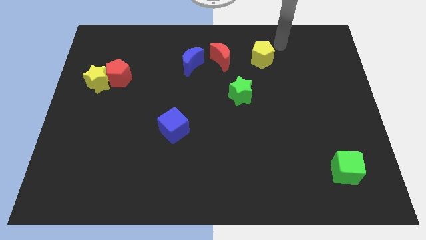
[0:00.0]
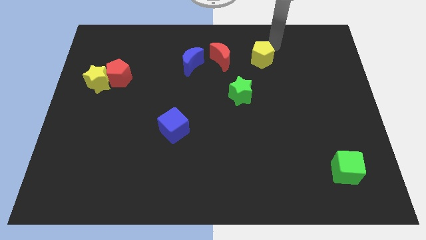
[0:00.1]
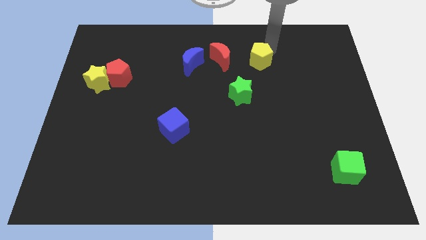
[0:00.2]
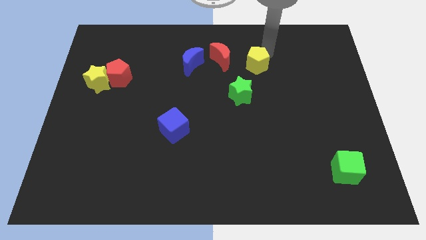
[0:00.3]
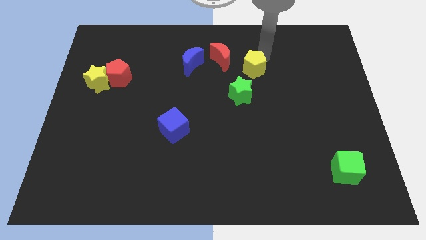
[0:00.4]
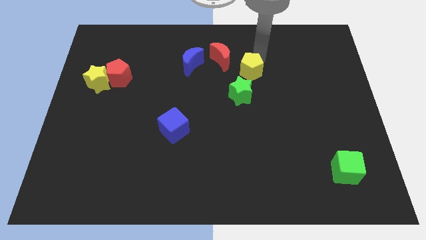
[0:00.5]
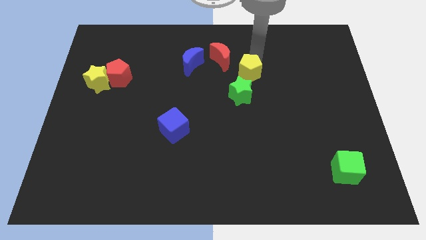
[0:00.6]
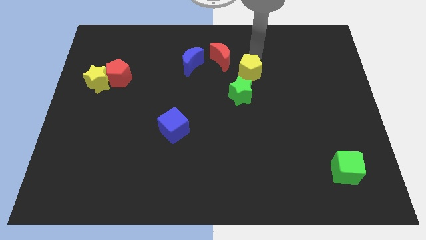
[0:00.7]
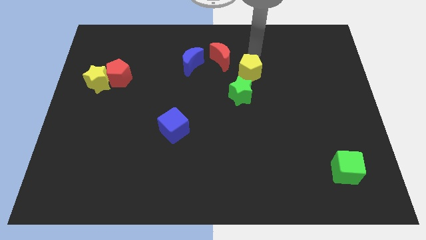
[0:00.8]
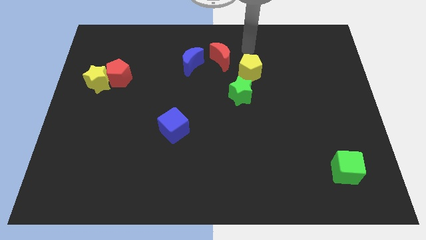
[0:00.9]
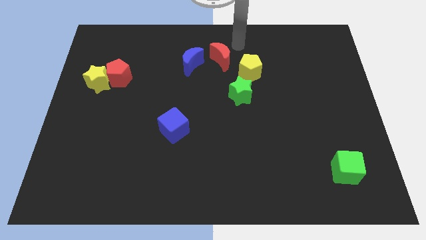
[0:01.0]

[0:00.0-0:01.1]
push the yellow pentagon to the top right side of the green star

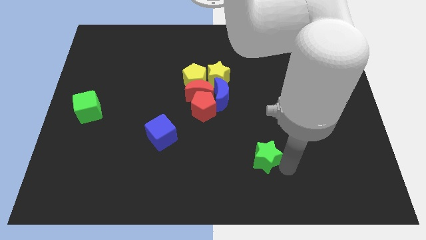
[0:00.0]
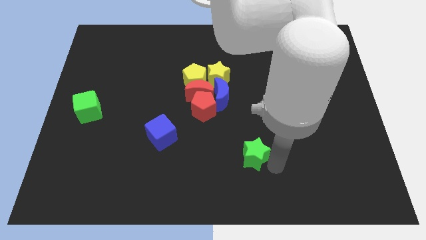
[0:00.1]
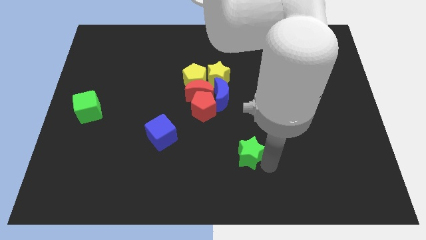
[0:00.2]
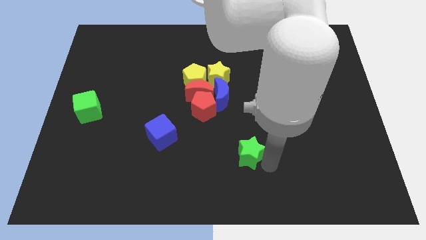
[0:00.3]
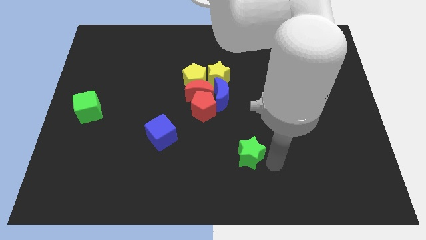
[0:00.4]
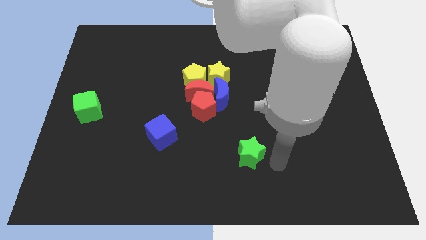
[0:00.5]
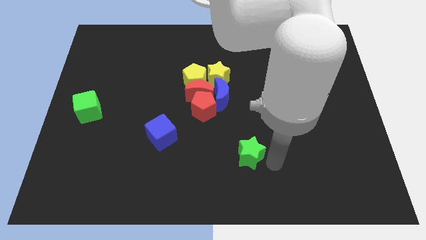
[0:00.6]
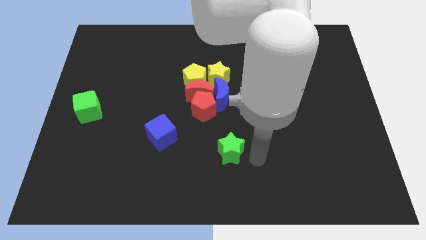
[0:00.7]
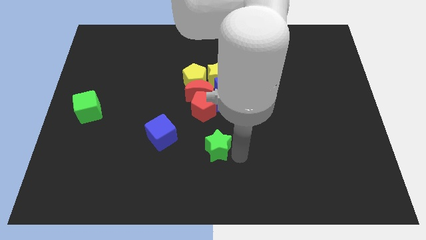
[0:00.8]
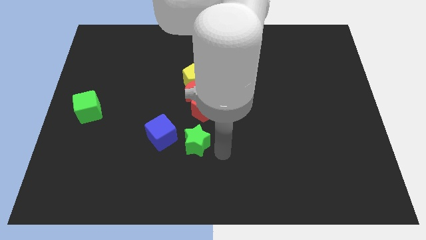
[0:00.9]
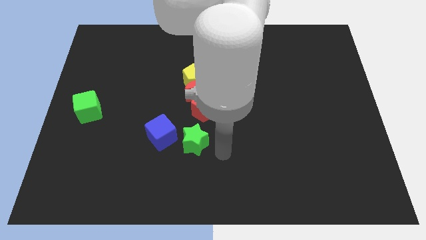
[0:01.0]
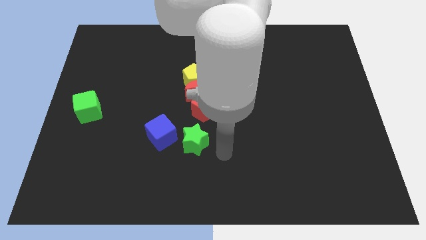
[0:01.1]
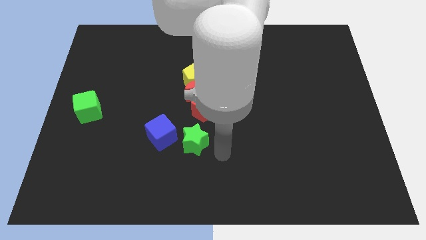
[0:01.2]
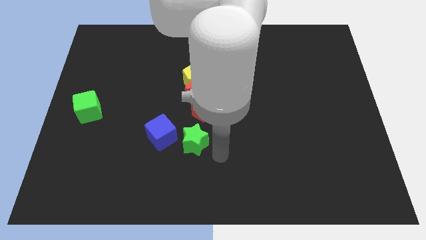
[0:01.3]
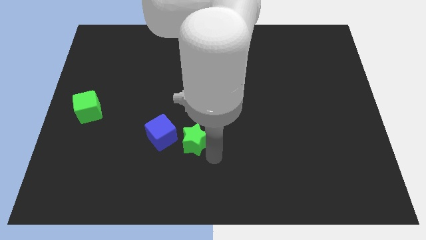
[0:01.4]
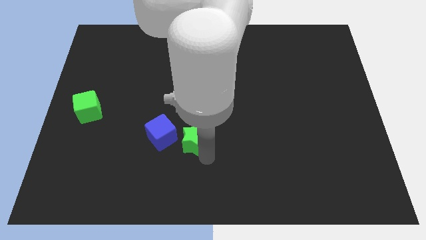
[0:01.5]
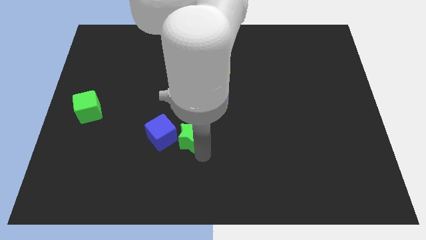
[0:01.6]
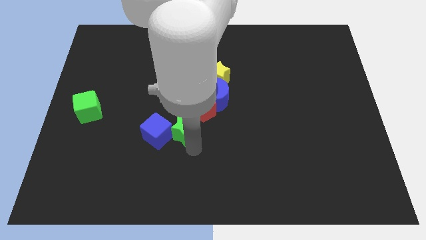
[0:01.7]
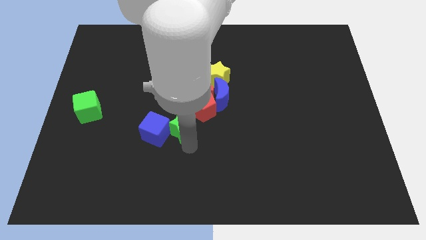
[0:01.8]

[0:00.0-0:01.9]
push the green star into the blue cube

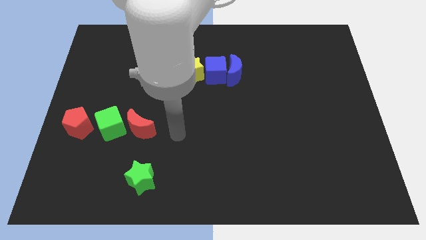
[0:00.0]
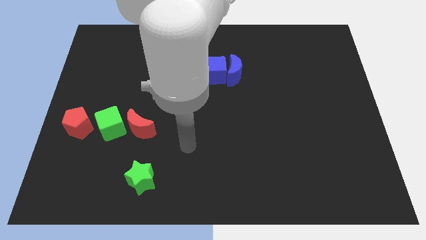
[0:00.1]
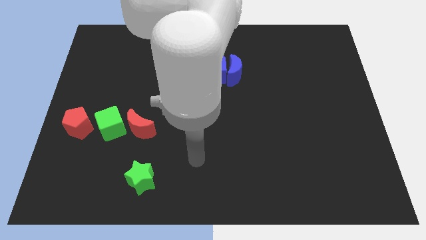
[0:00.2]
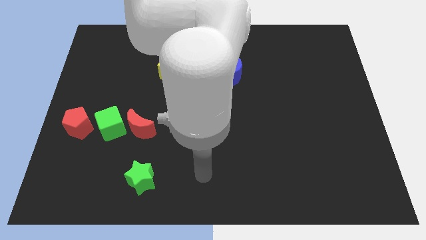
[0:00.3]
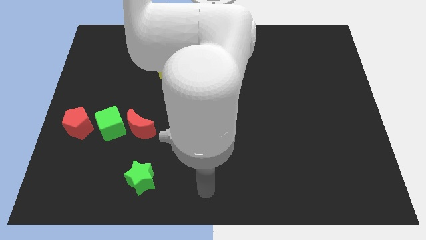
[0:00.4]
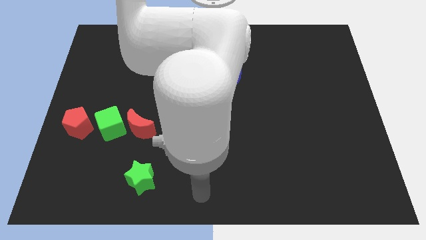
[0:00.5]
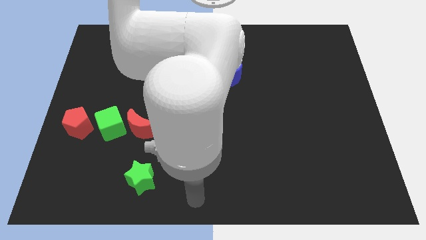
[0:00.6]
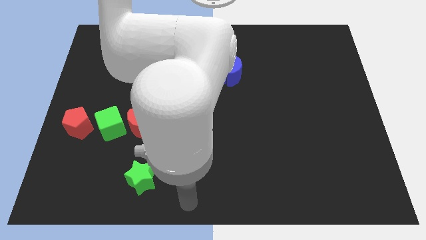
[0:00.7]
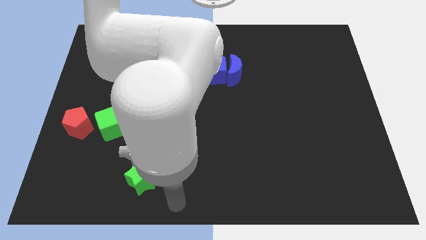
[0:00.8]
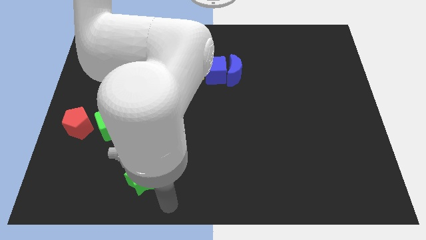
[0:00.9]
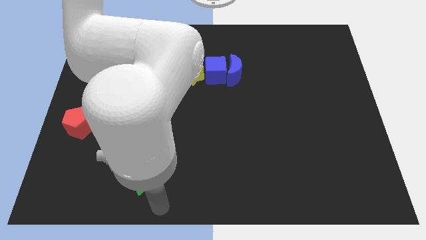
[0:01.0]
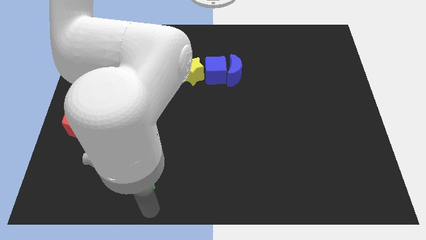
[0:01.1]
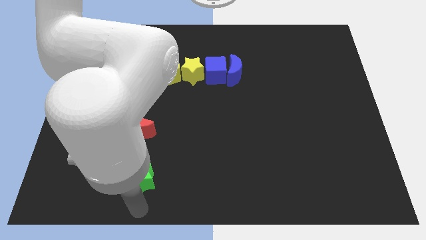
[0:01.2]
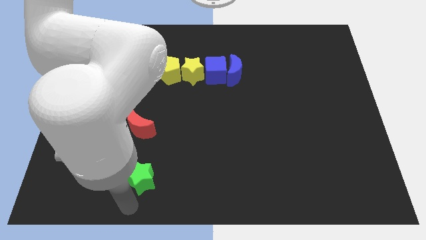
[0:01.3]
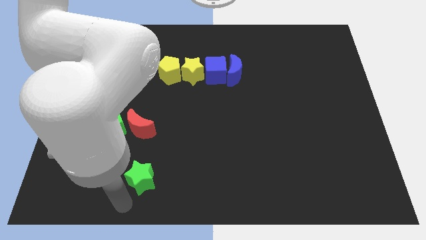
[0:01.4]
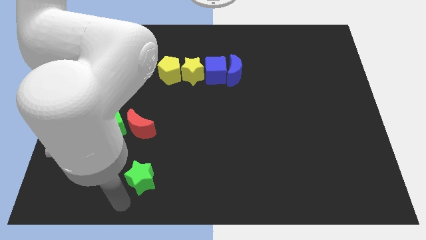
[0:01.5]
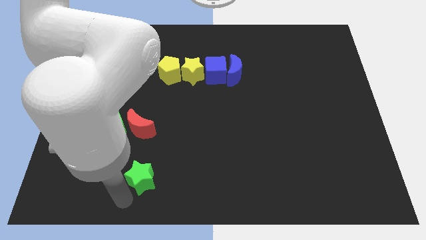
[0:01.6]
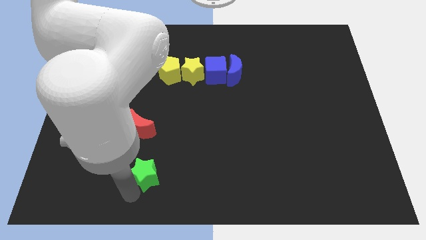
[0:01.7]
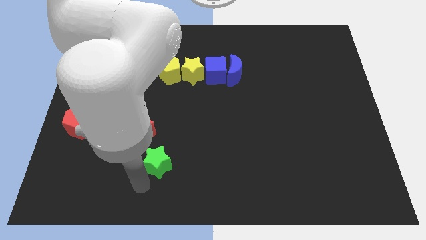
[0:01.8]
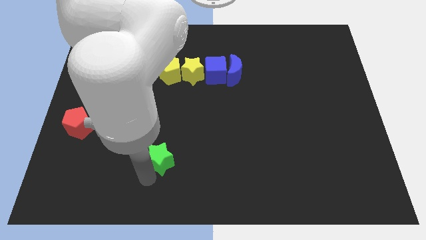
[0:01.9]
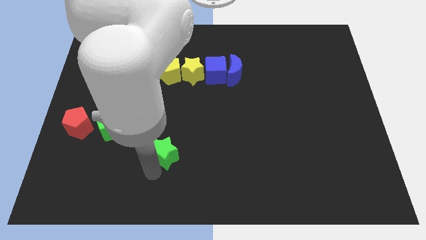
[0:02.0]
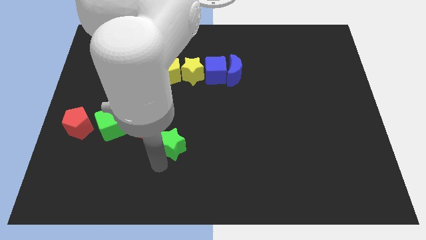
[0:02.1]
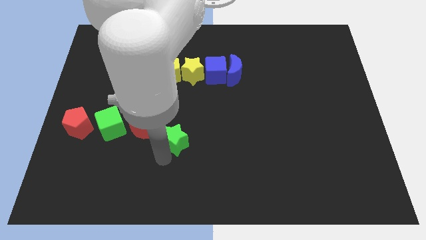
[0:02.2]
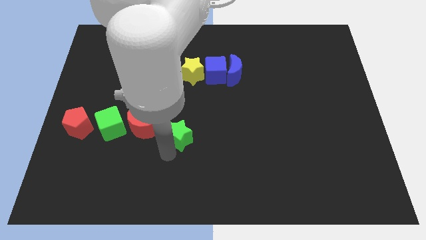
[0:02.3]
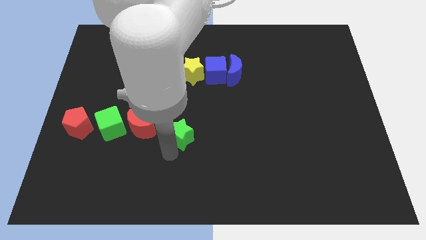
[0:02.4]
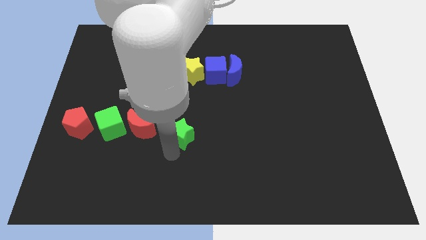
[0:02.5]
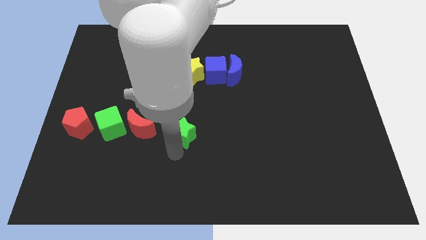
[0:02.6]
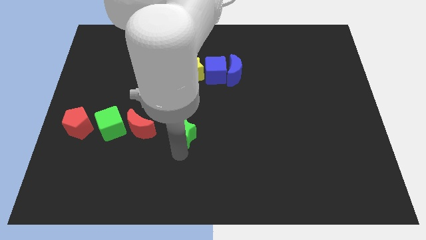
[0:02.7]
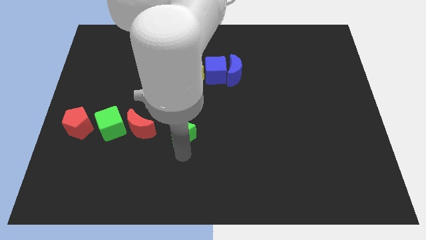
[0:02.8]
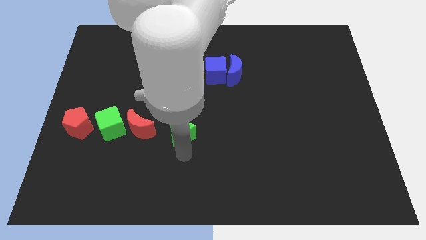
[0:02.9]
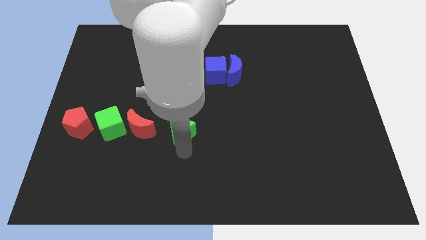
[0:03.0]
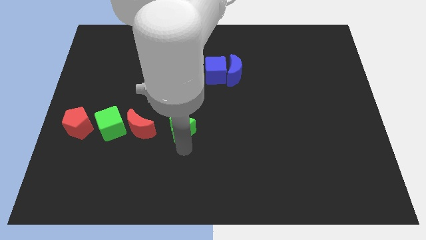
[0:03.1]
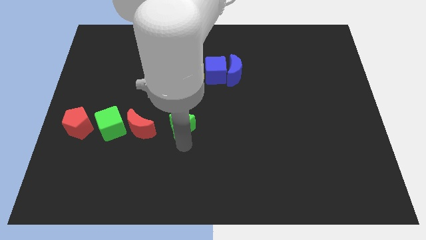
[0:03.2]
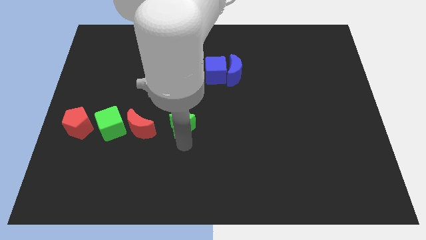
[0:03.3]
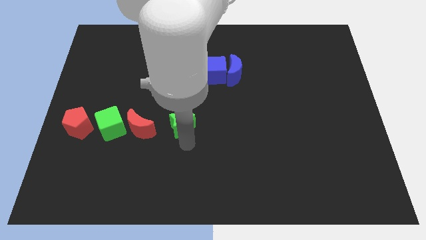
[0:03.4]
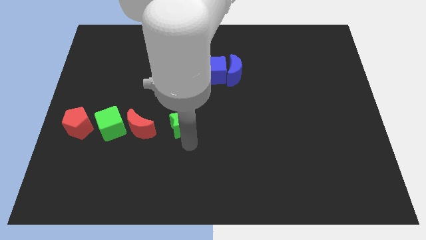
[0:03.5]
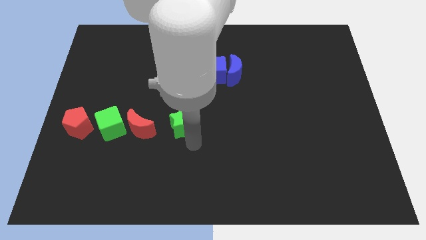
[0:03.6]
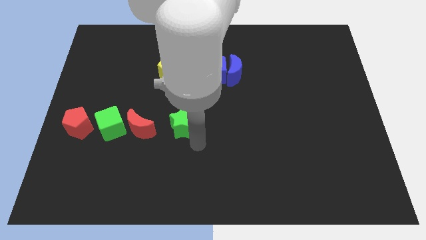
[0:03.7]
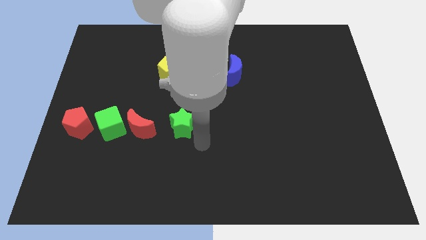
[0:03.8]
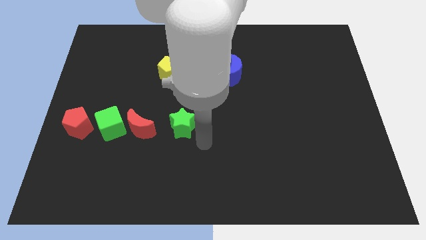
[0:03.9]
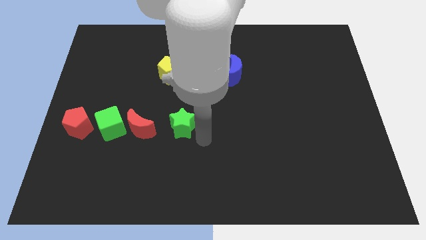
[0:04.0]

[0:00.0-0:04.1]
put the green star to the right side of the red moon

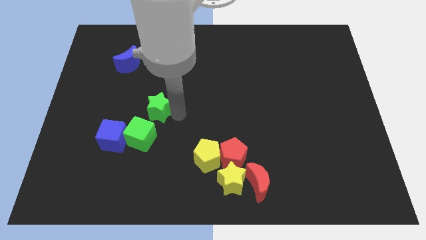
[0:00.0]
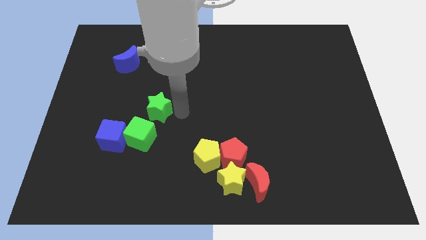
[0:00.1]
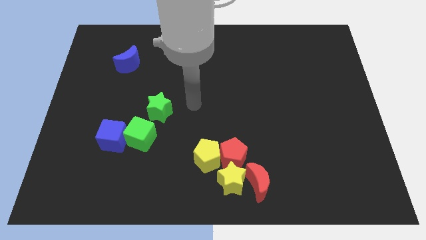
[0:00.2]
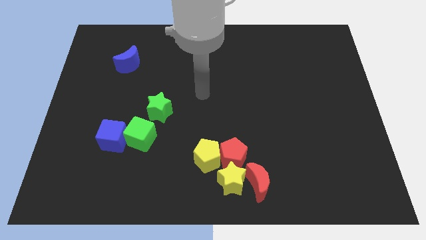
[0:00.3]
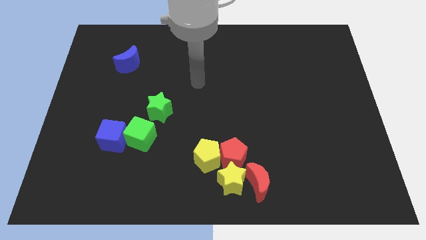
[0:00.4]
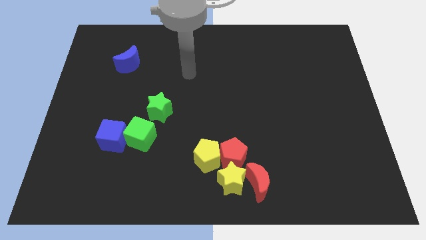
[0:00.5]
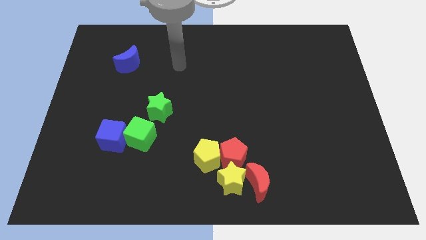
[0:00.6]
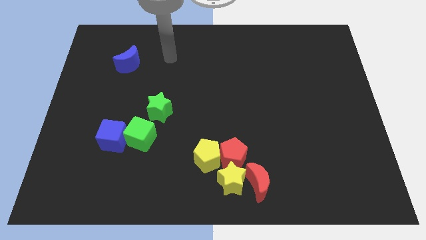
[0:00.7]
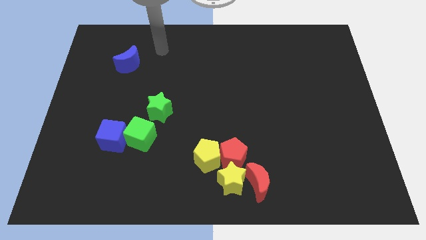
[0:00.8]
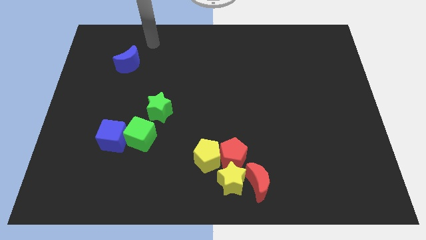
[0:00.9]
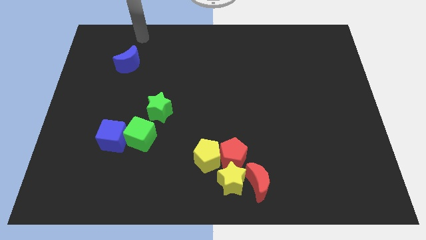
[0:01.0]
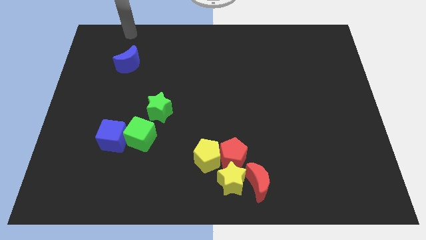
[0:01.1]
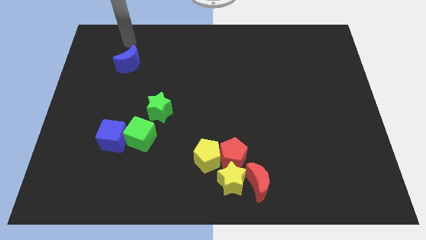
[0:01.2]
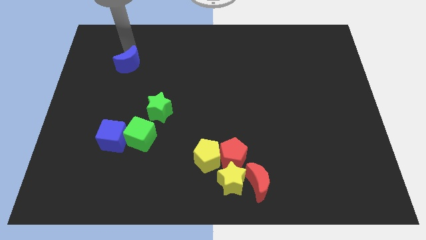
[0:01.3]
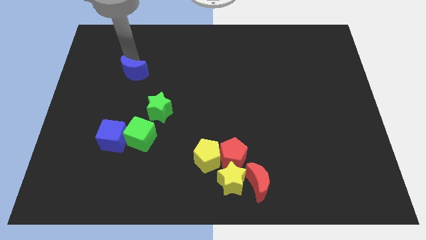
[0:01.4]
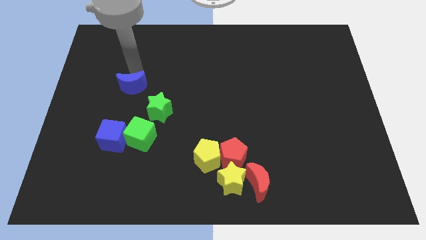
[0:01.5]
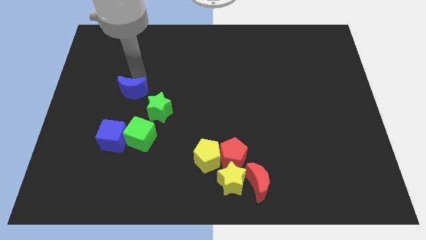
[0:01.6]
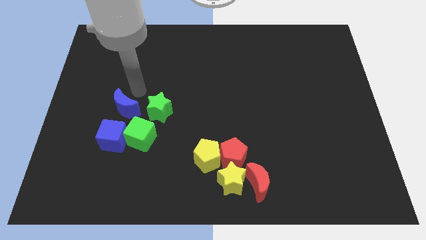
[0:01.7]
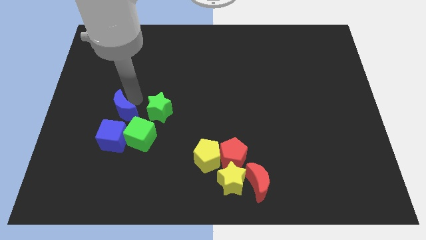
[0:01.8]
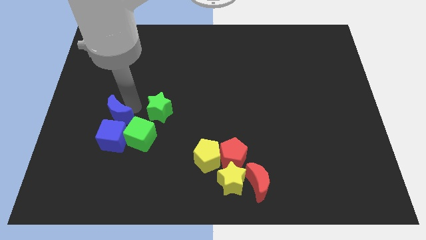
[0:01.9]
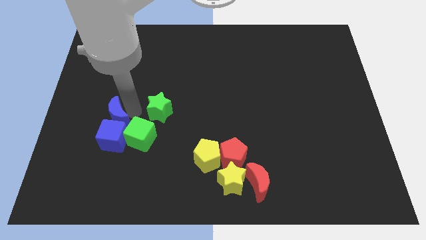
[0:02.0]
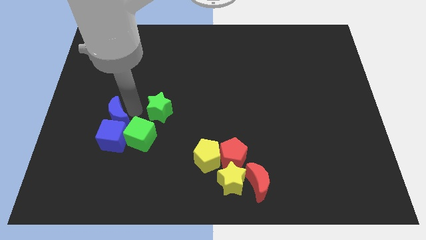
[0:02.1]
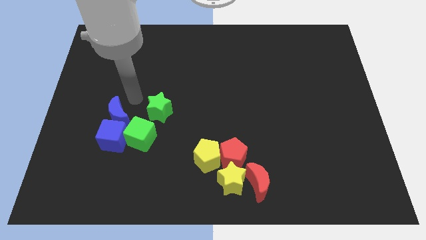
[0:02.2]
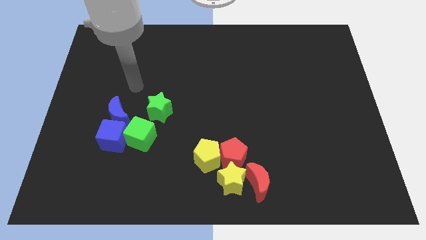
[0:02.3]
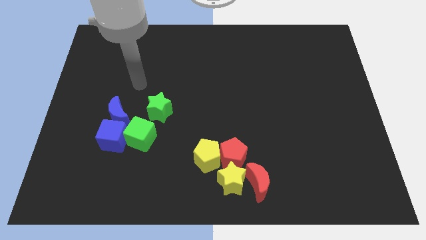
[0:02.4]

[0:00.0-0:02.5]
push blue moon into the blue moon
